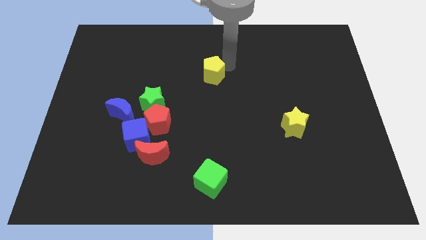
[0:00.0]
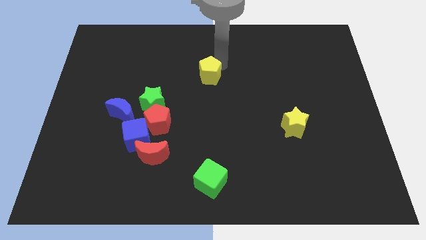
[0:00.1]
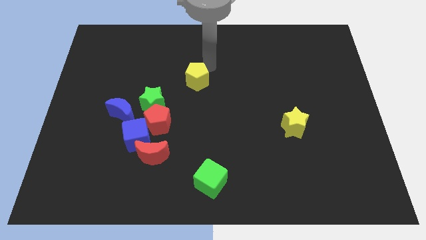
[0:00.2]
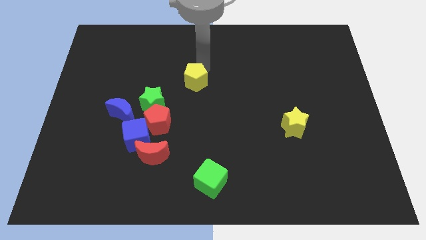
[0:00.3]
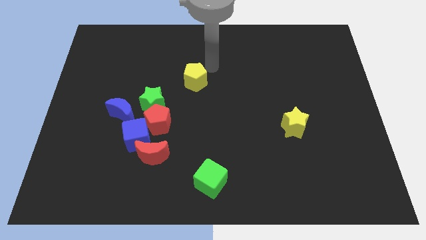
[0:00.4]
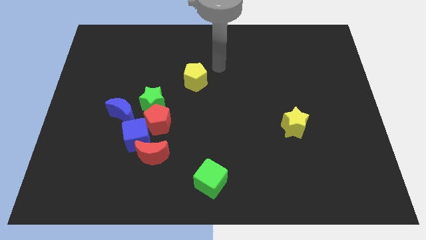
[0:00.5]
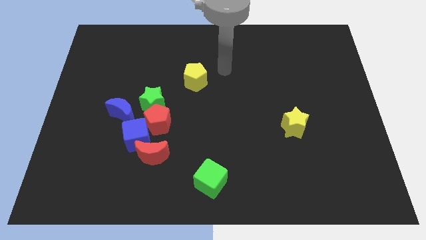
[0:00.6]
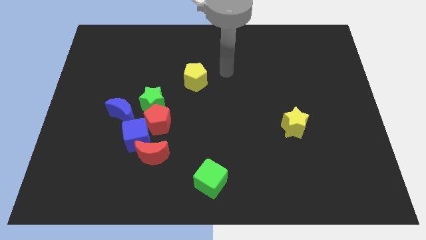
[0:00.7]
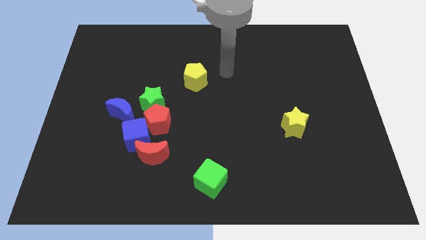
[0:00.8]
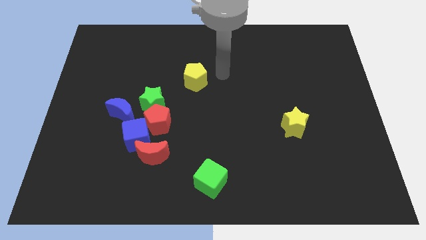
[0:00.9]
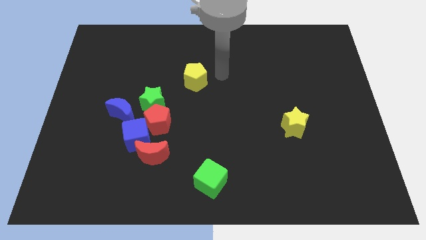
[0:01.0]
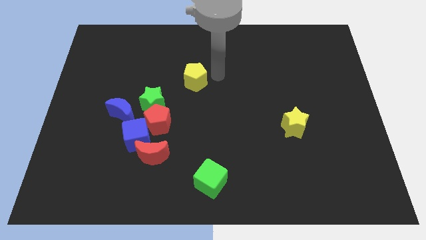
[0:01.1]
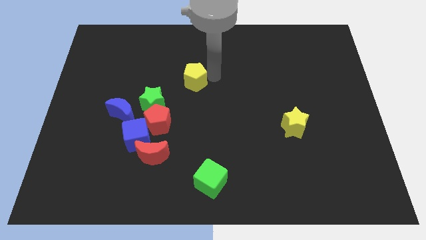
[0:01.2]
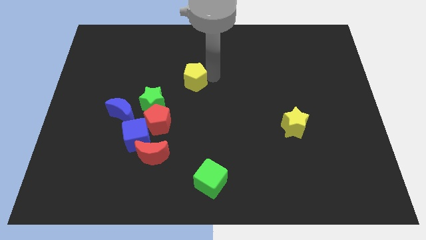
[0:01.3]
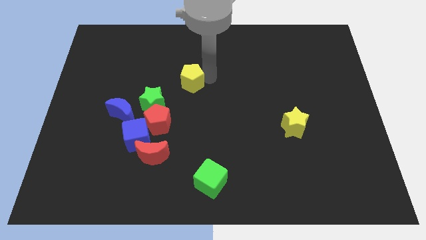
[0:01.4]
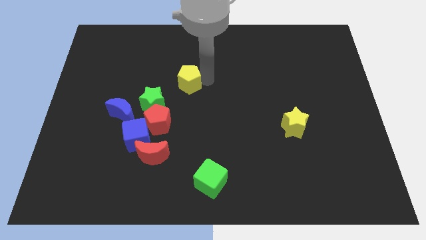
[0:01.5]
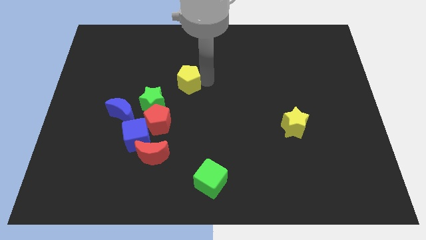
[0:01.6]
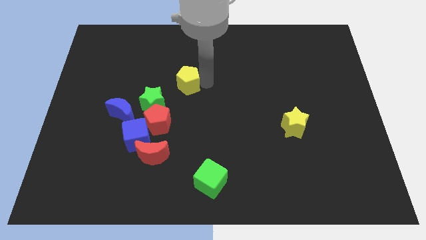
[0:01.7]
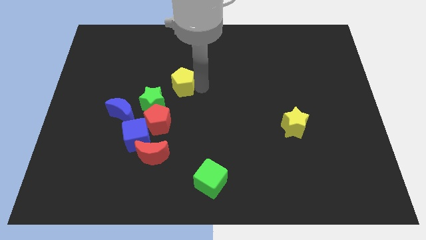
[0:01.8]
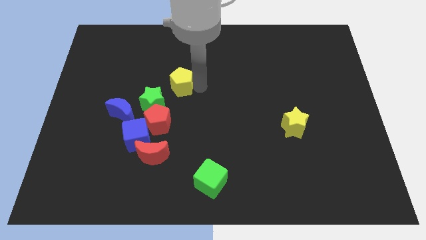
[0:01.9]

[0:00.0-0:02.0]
push the yellow pentagon diagonally top right of the green star

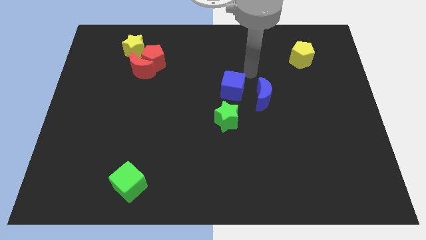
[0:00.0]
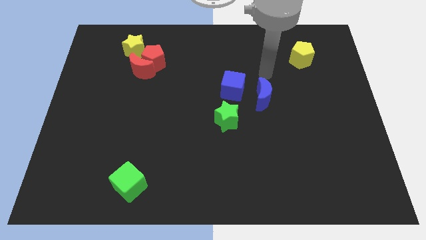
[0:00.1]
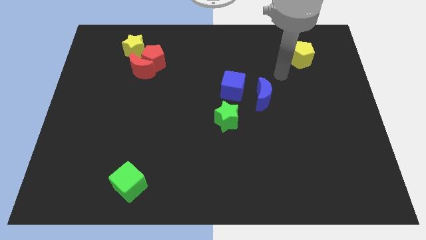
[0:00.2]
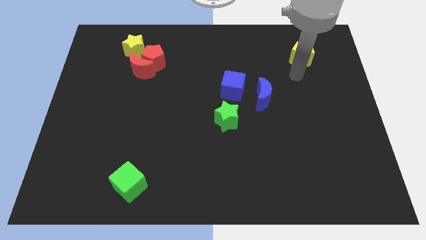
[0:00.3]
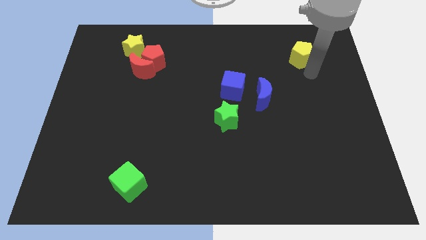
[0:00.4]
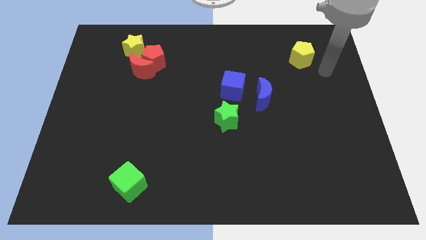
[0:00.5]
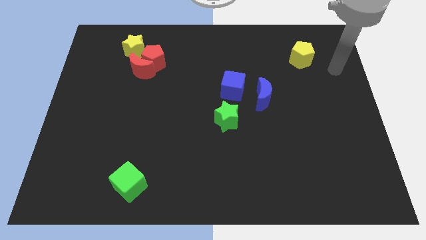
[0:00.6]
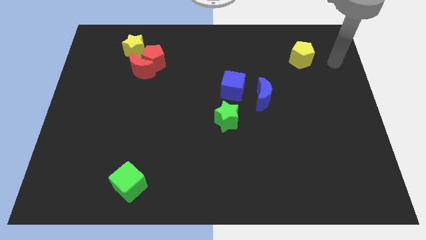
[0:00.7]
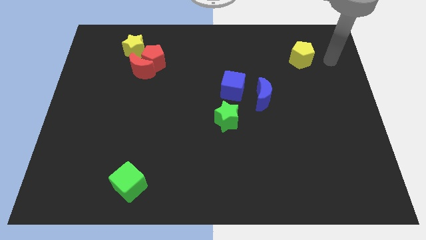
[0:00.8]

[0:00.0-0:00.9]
move your arm to the right of yellow pentagon

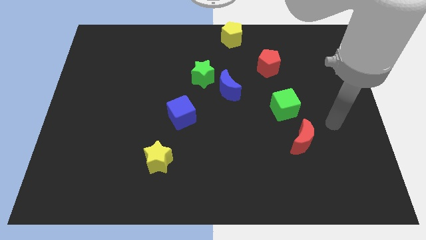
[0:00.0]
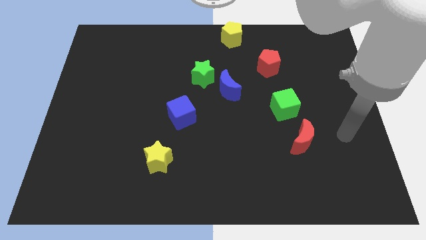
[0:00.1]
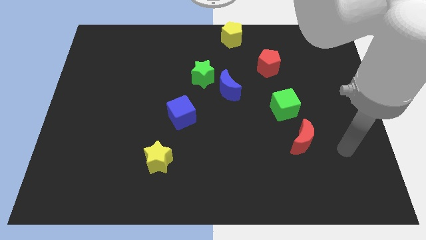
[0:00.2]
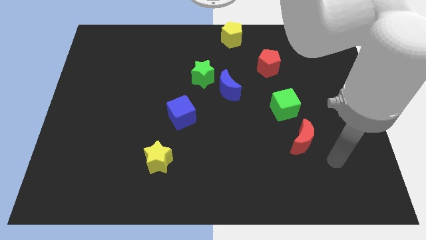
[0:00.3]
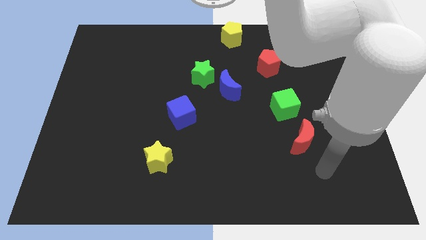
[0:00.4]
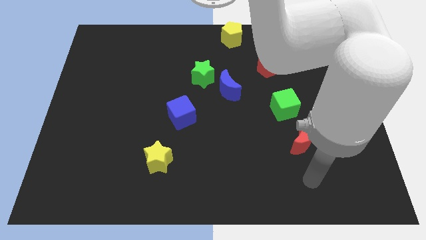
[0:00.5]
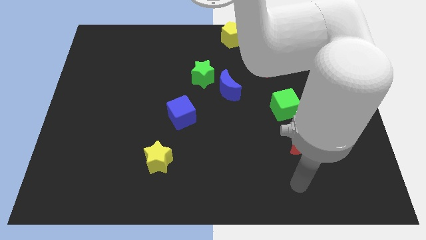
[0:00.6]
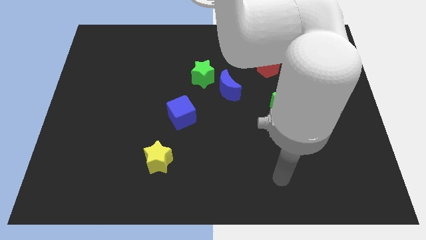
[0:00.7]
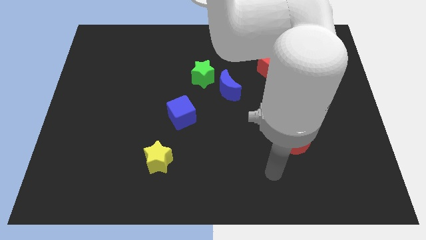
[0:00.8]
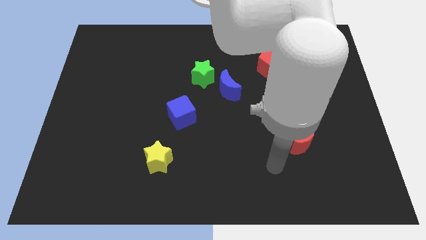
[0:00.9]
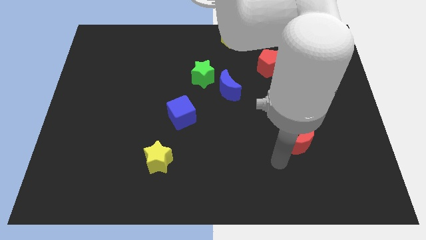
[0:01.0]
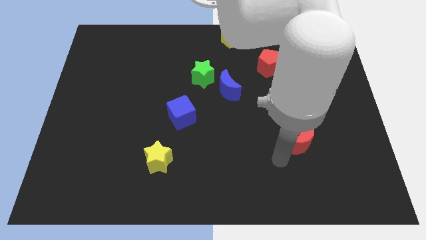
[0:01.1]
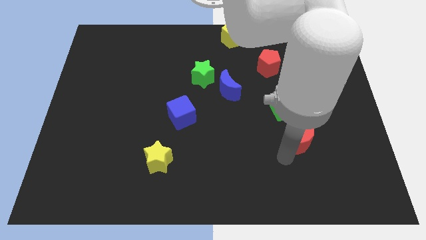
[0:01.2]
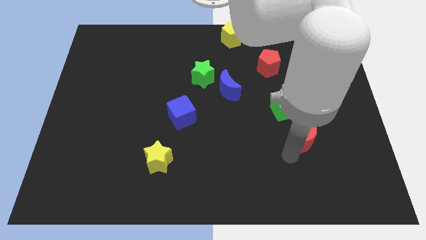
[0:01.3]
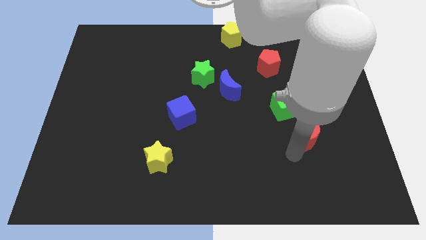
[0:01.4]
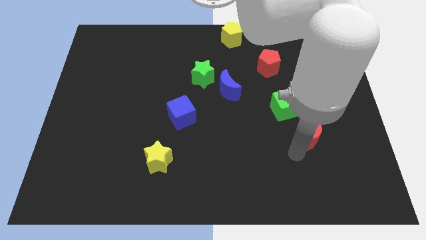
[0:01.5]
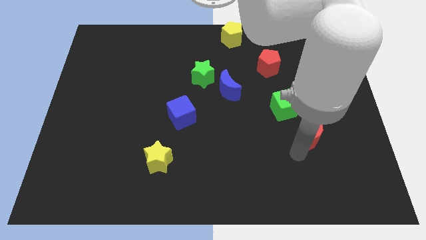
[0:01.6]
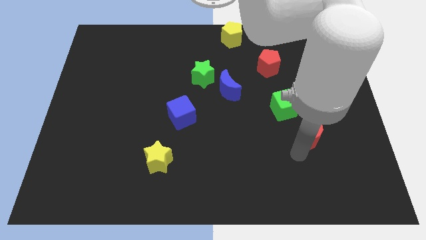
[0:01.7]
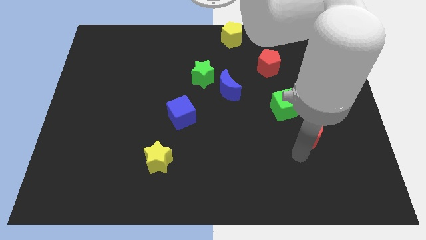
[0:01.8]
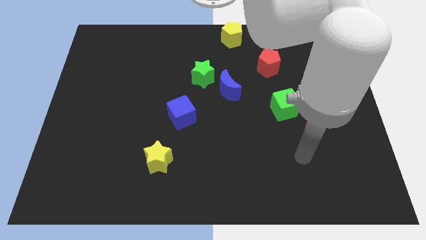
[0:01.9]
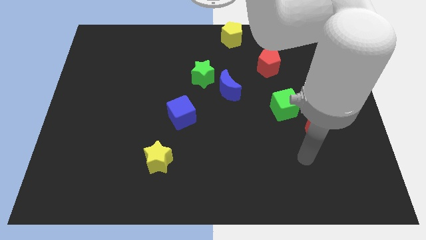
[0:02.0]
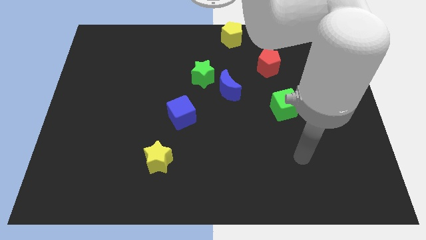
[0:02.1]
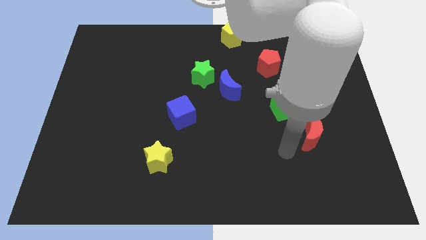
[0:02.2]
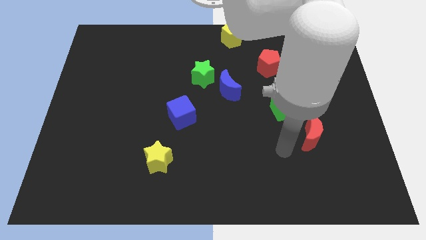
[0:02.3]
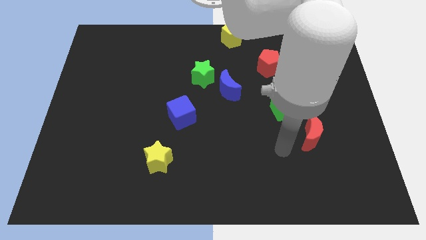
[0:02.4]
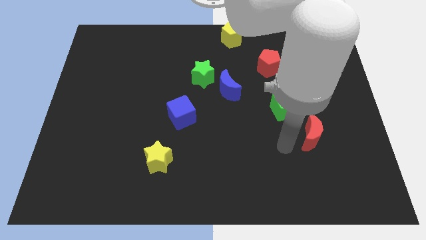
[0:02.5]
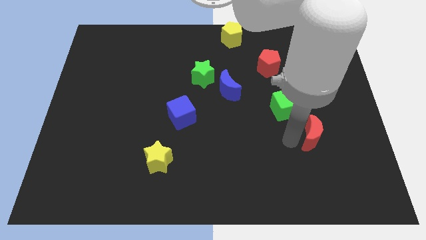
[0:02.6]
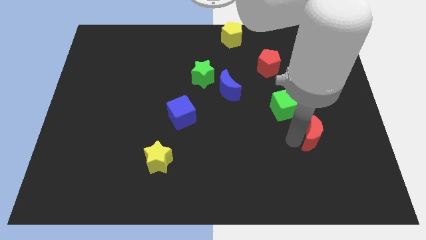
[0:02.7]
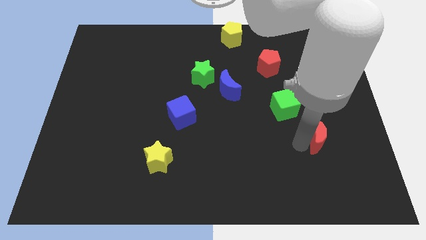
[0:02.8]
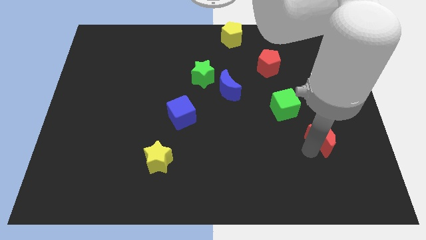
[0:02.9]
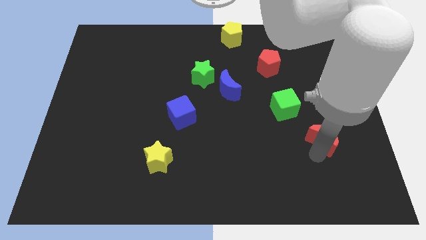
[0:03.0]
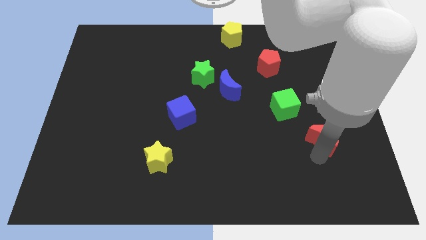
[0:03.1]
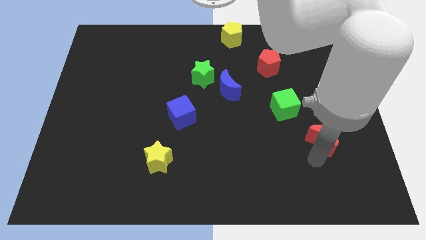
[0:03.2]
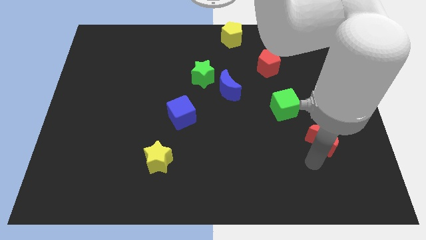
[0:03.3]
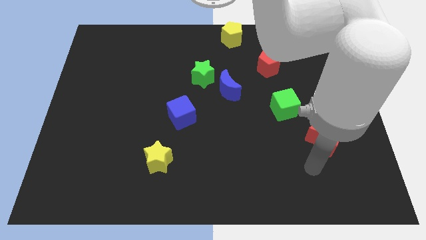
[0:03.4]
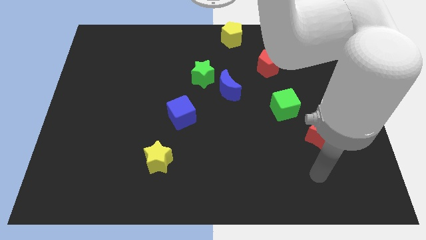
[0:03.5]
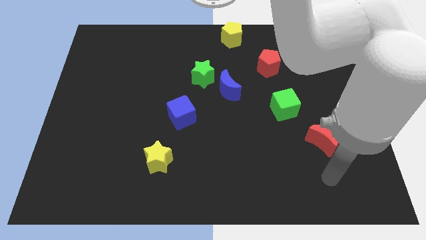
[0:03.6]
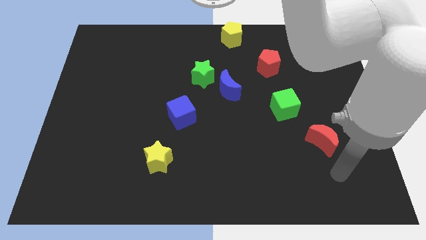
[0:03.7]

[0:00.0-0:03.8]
push the red moon towards the bottom right

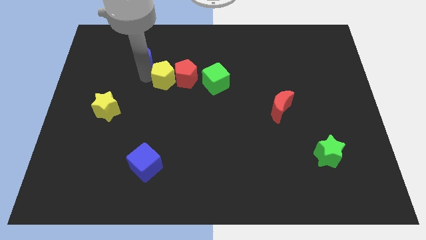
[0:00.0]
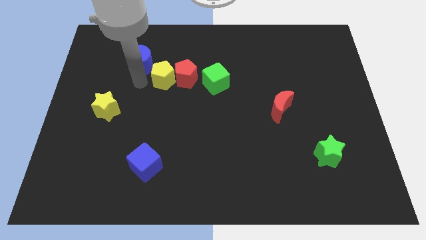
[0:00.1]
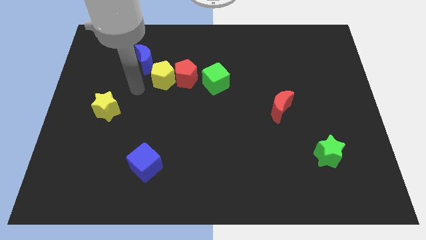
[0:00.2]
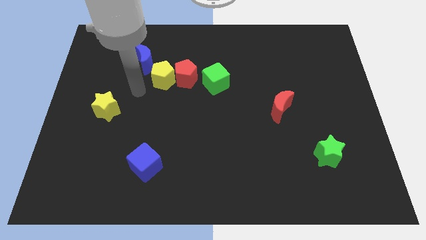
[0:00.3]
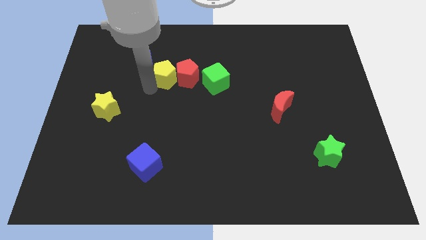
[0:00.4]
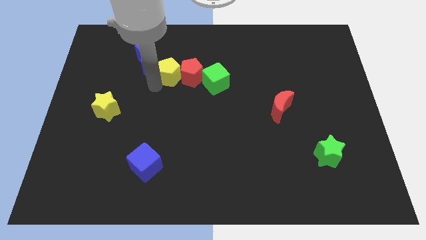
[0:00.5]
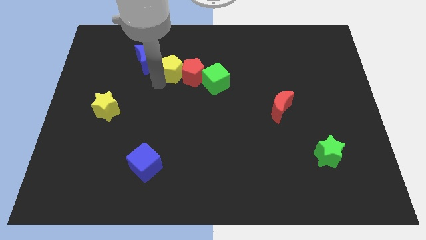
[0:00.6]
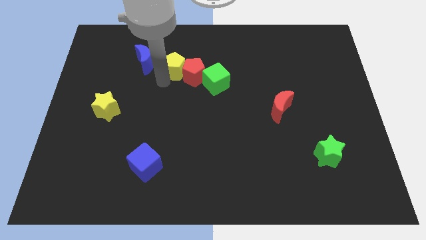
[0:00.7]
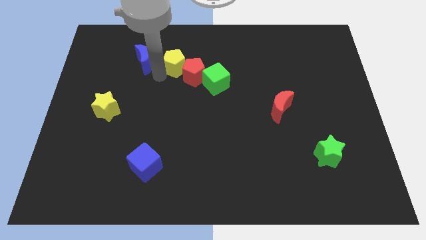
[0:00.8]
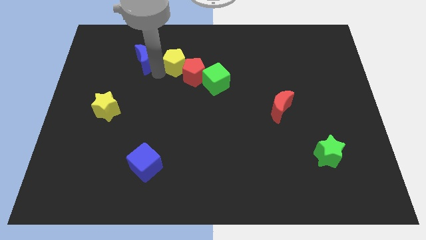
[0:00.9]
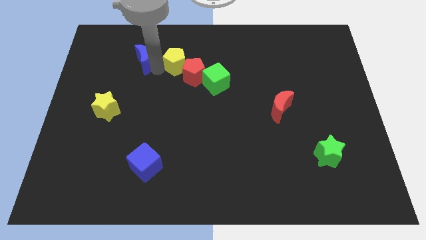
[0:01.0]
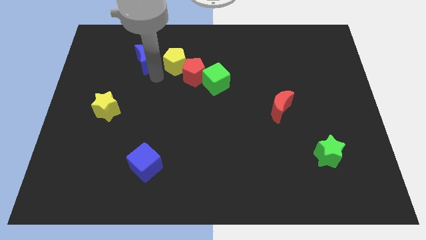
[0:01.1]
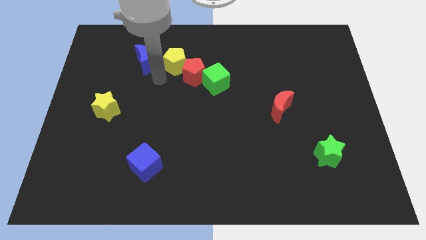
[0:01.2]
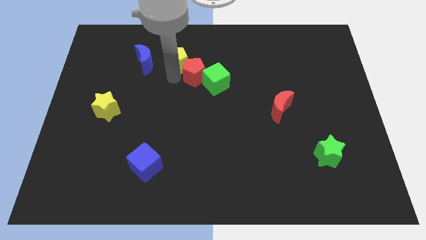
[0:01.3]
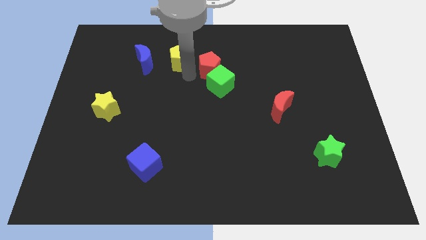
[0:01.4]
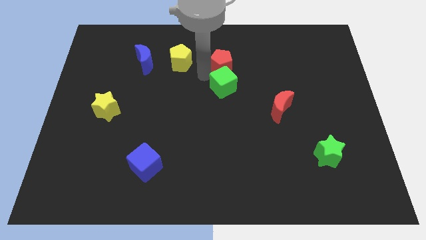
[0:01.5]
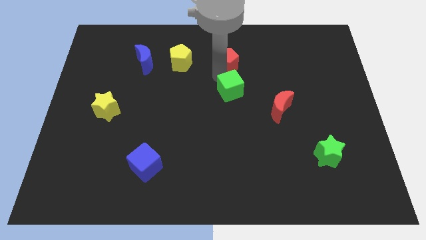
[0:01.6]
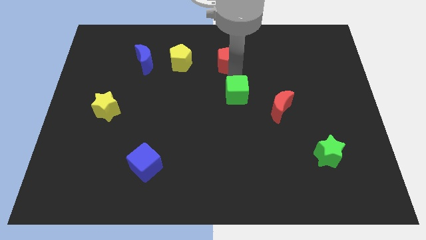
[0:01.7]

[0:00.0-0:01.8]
point your arm between green cube and red pentagon

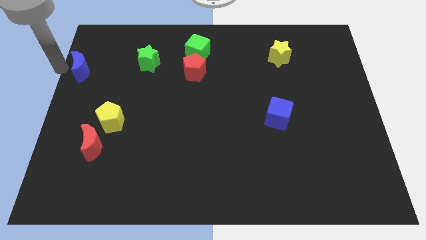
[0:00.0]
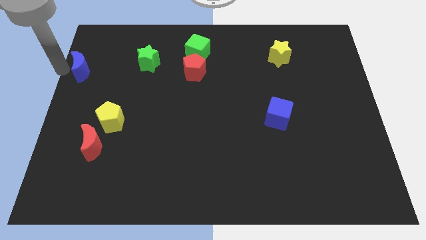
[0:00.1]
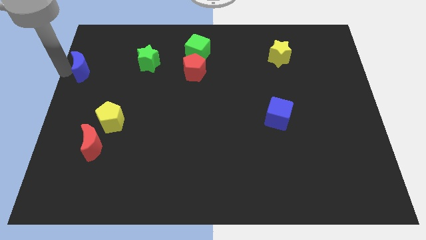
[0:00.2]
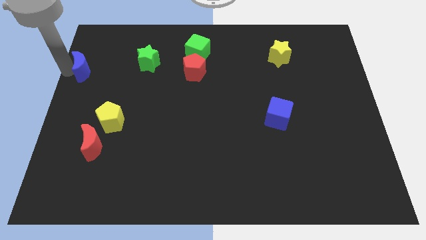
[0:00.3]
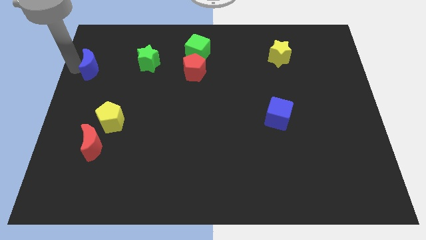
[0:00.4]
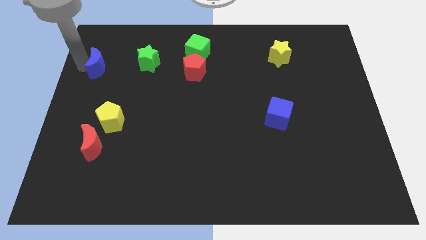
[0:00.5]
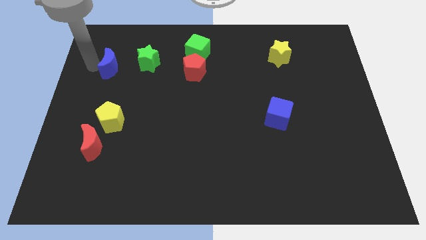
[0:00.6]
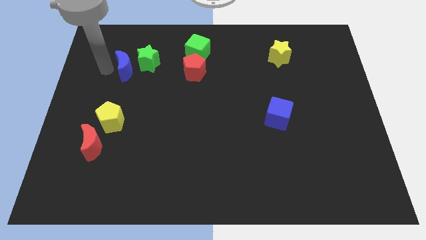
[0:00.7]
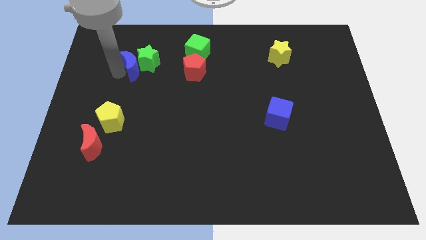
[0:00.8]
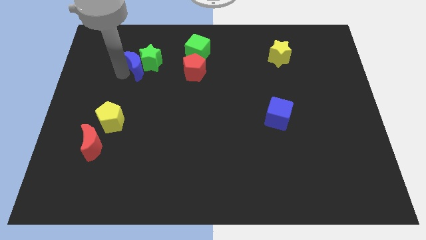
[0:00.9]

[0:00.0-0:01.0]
place blue moon to the left of green star
